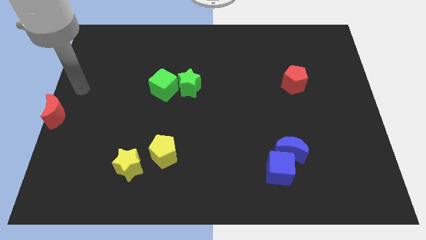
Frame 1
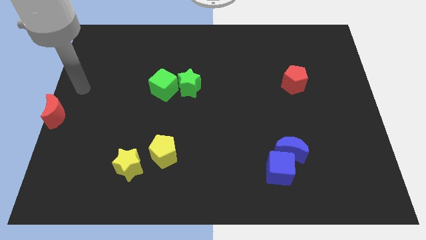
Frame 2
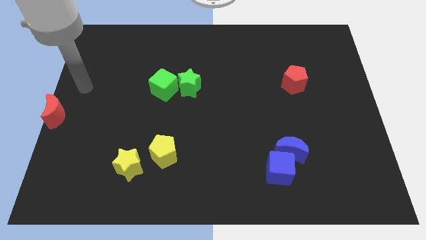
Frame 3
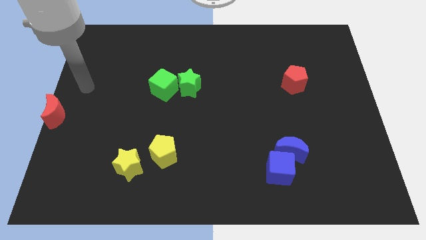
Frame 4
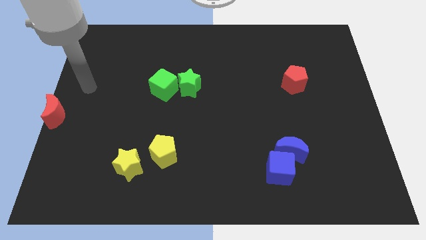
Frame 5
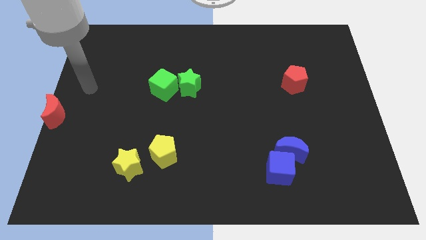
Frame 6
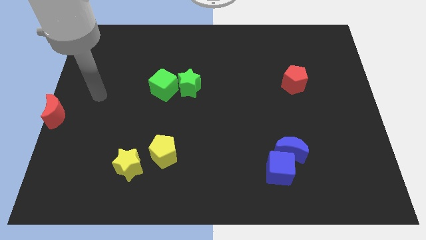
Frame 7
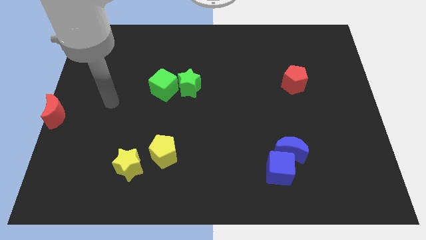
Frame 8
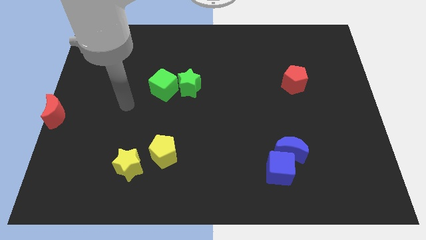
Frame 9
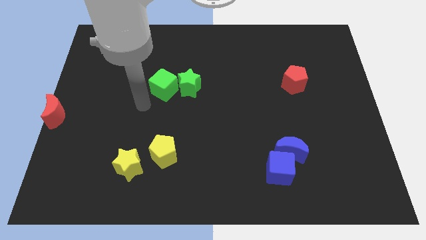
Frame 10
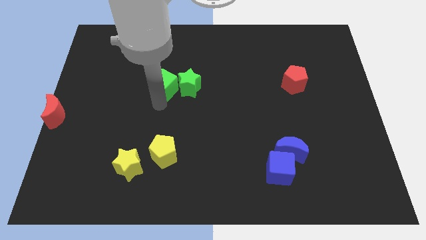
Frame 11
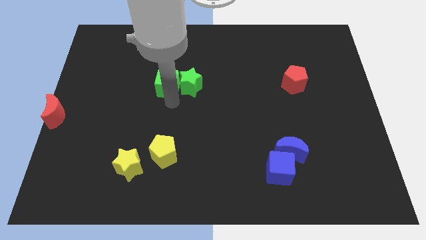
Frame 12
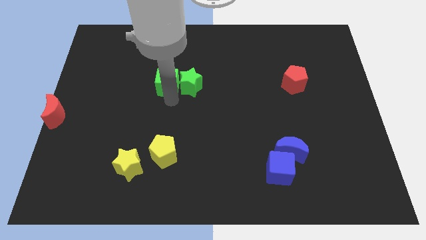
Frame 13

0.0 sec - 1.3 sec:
place your hand below the green cube

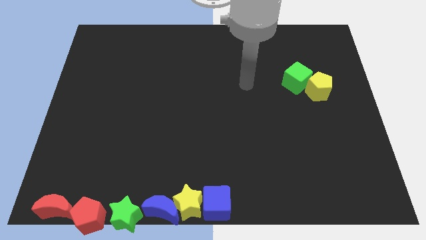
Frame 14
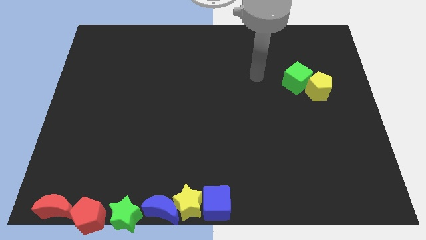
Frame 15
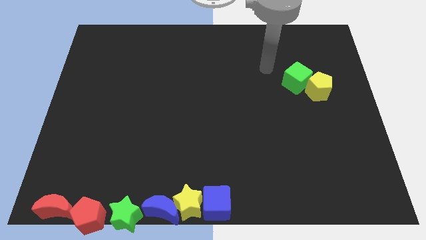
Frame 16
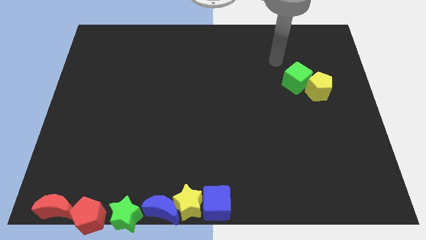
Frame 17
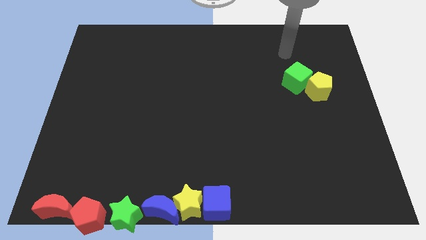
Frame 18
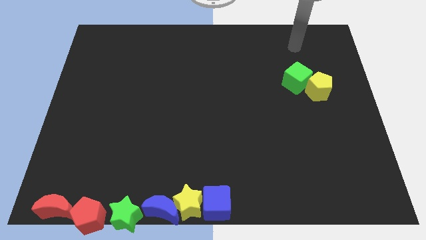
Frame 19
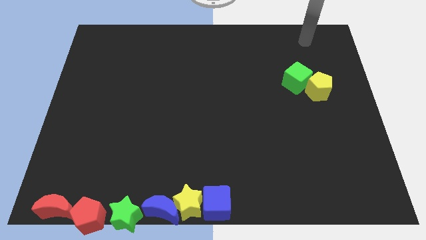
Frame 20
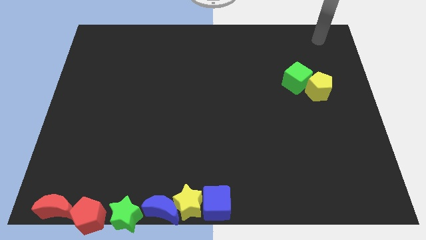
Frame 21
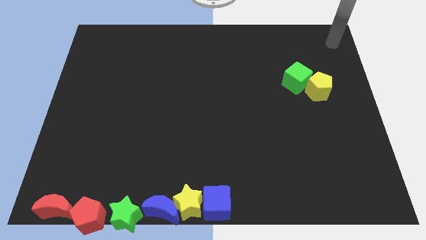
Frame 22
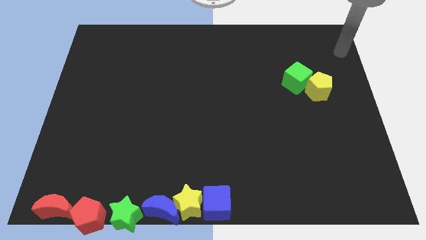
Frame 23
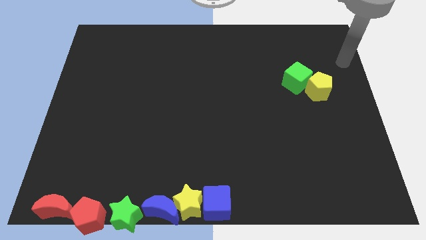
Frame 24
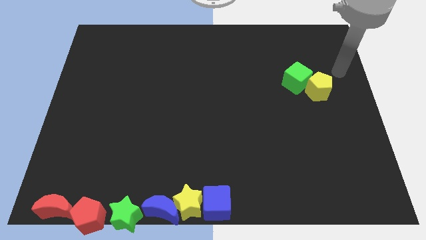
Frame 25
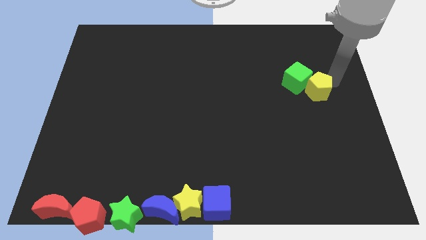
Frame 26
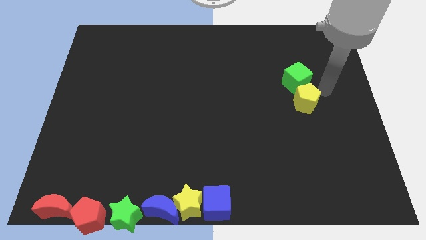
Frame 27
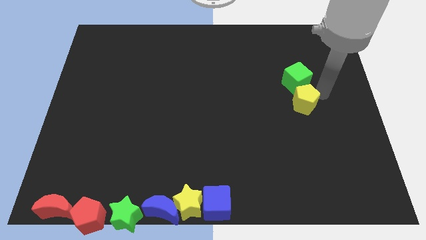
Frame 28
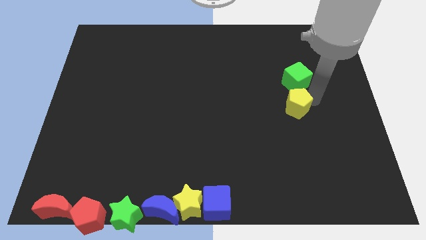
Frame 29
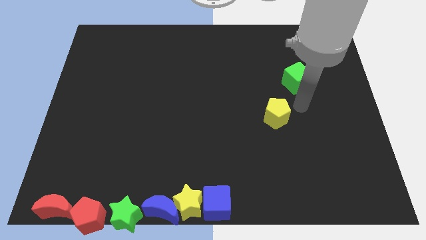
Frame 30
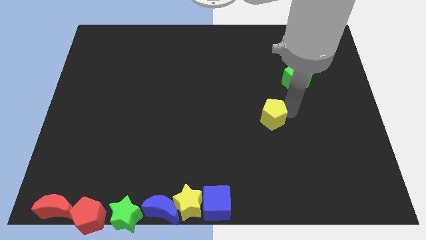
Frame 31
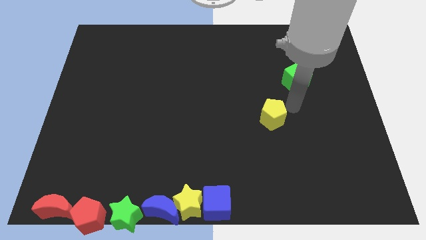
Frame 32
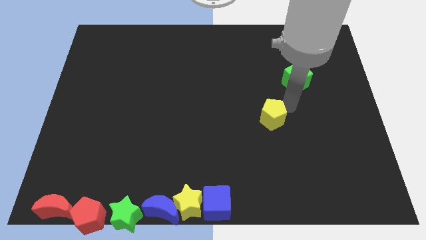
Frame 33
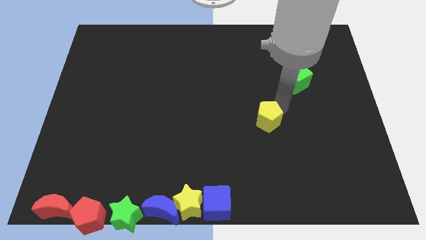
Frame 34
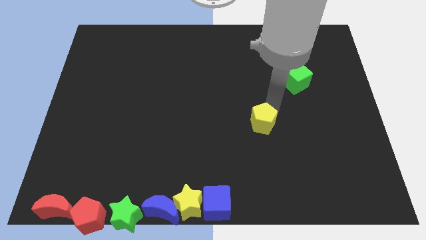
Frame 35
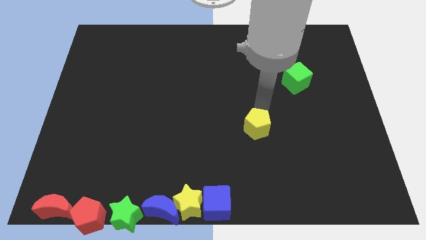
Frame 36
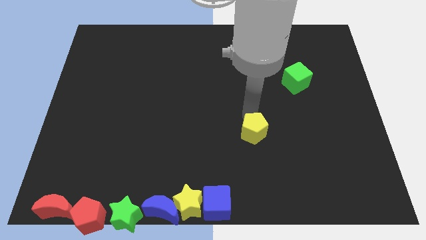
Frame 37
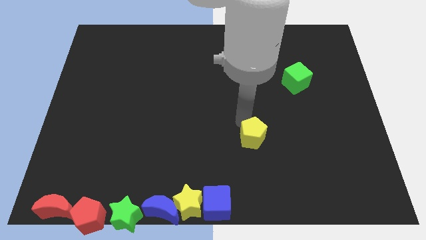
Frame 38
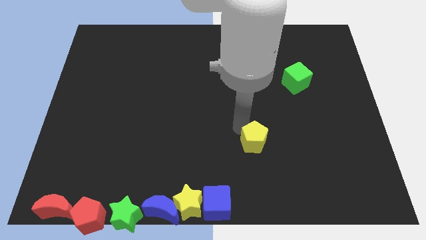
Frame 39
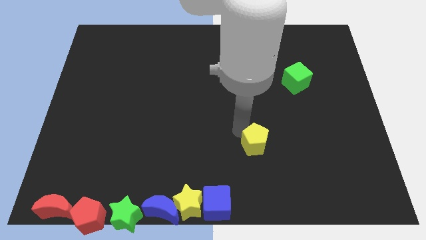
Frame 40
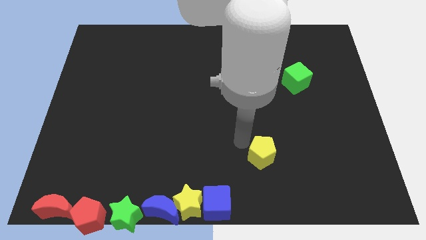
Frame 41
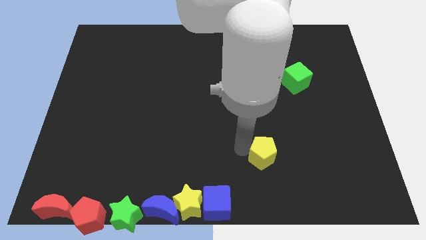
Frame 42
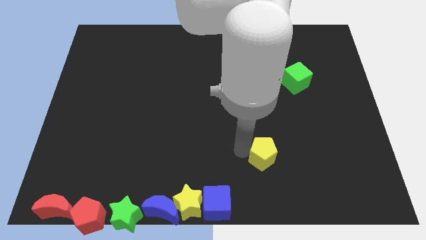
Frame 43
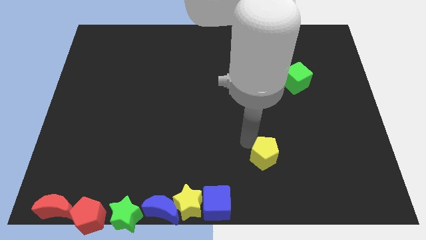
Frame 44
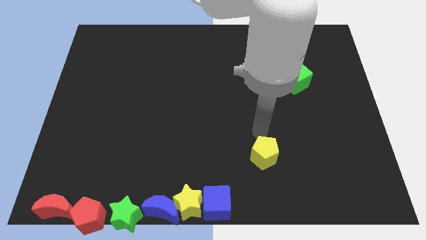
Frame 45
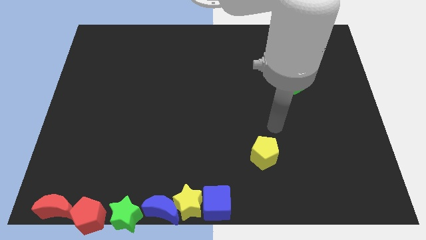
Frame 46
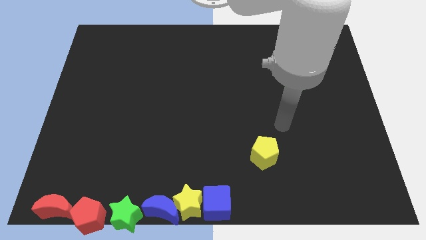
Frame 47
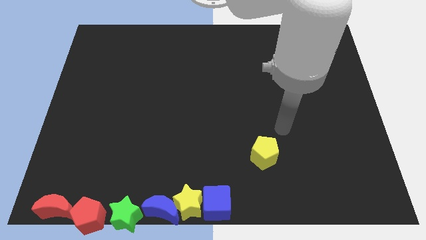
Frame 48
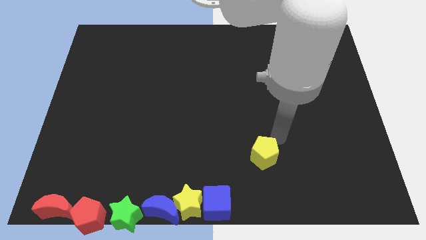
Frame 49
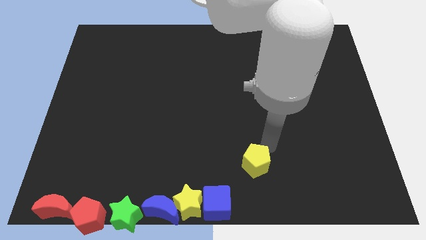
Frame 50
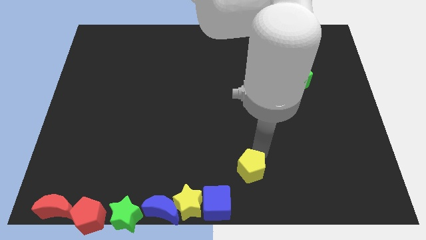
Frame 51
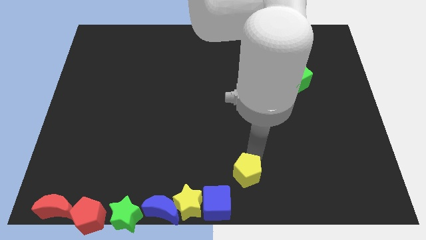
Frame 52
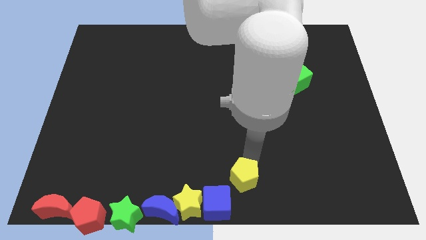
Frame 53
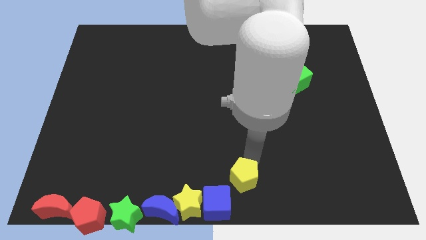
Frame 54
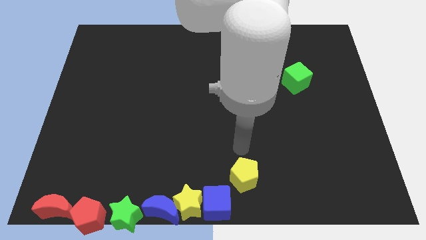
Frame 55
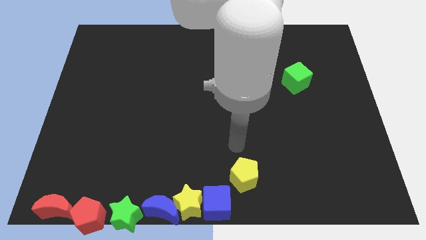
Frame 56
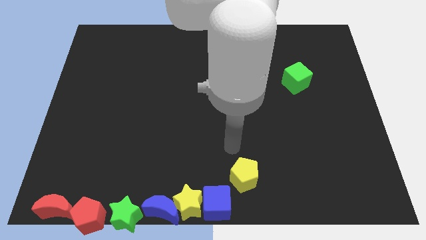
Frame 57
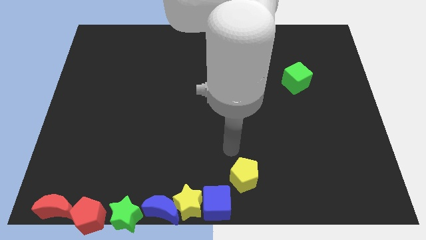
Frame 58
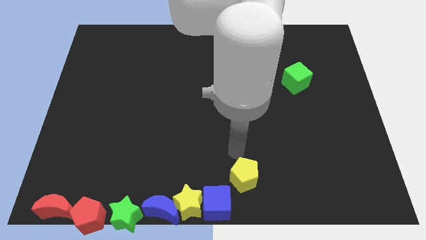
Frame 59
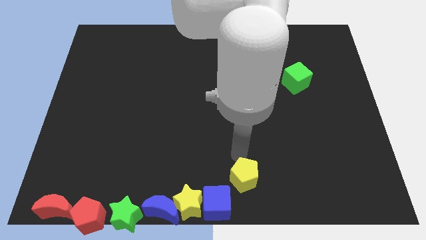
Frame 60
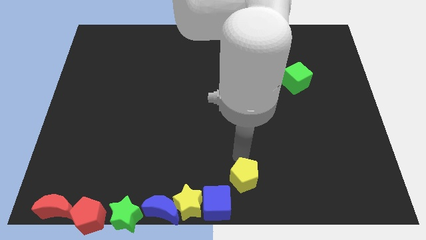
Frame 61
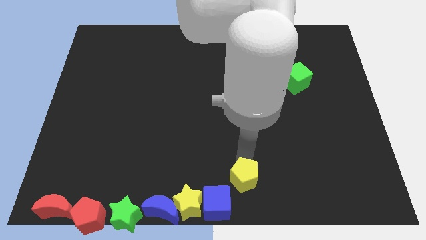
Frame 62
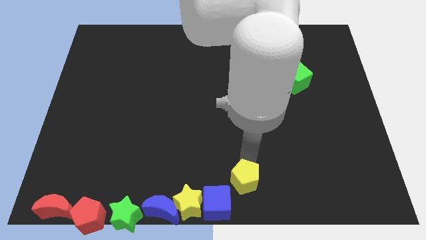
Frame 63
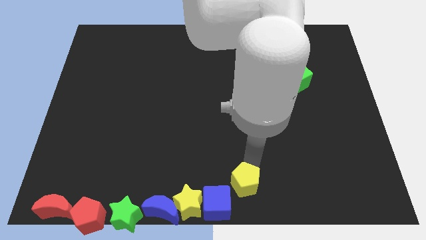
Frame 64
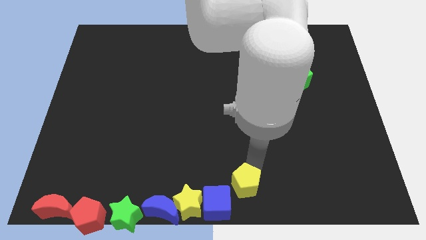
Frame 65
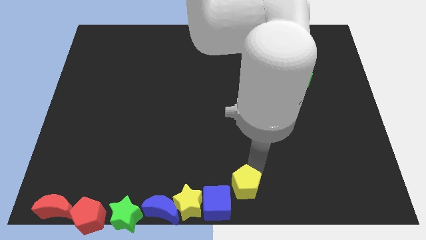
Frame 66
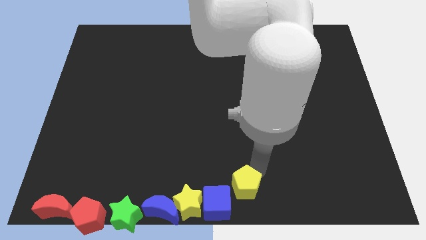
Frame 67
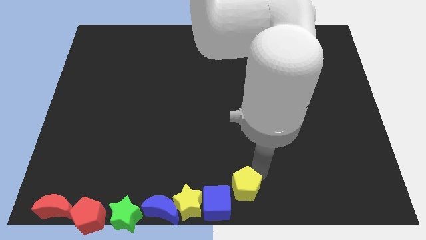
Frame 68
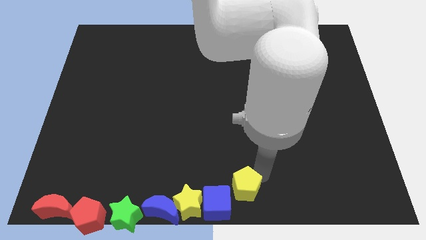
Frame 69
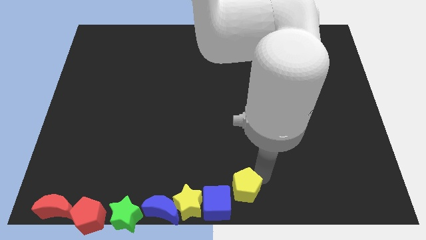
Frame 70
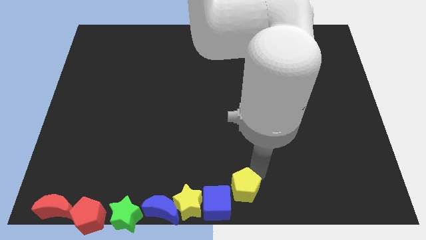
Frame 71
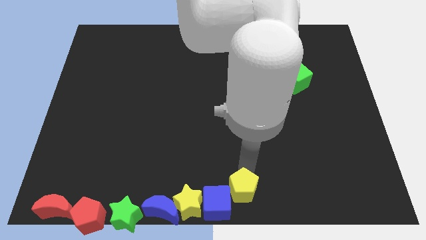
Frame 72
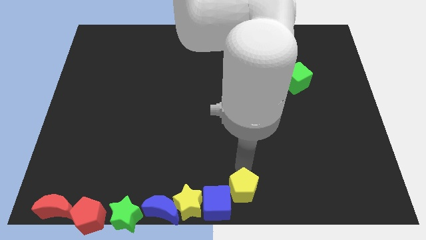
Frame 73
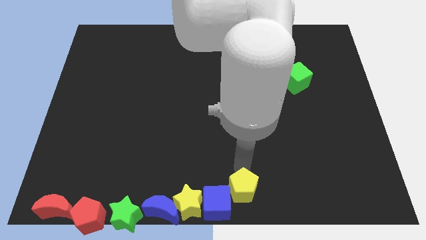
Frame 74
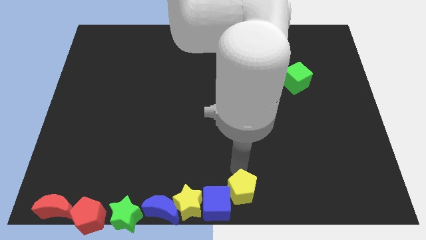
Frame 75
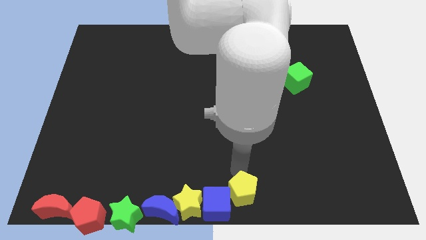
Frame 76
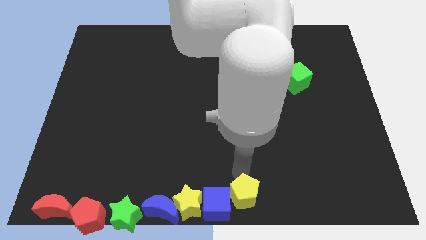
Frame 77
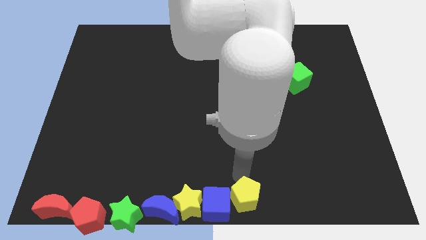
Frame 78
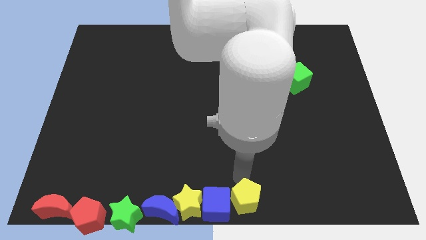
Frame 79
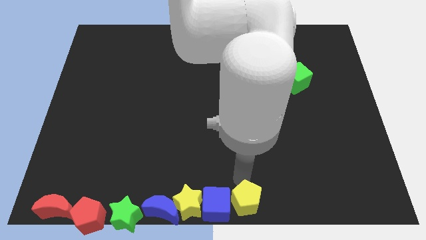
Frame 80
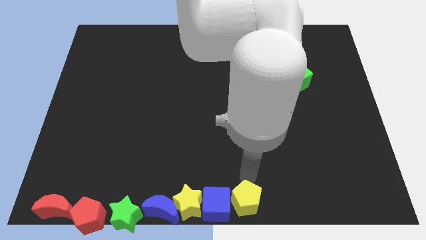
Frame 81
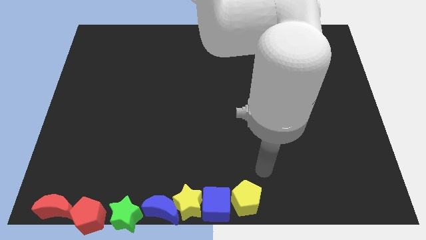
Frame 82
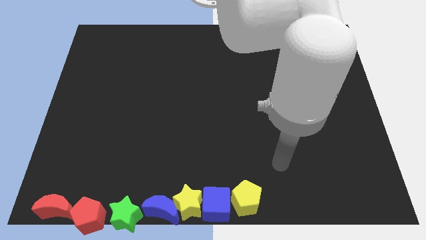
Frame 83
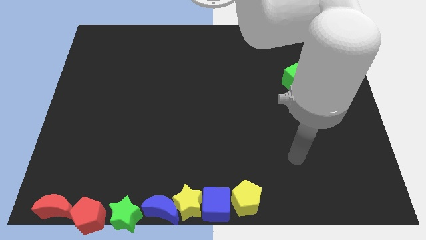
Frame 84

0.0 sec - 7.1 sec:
push the yellow pentagon to the right side of the blue cube

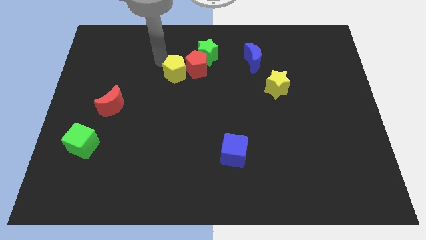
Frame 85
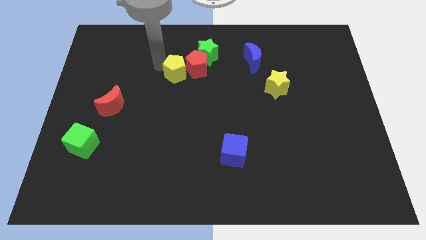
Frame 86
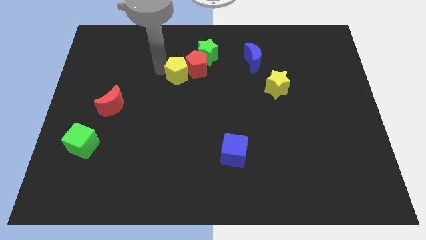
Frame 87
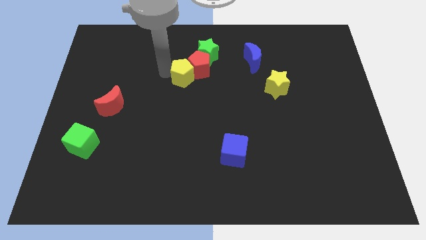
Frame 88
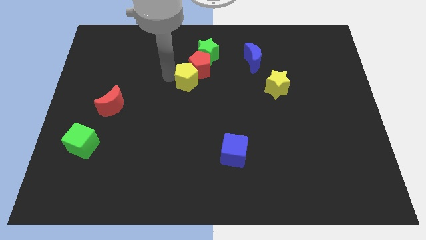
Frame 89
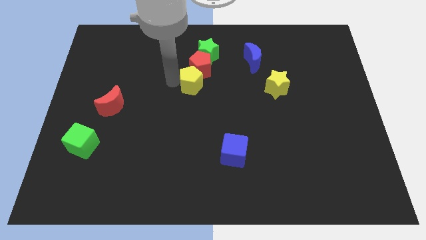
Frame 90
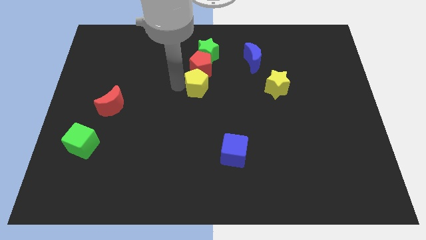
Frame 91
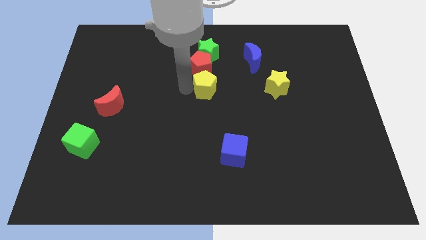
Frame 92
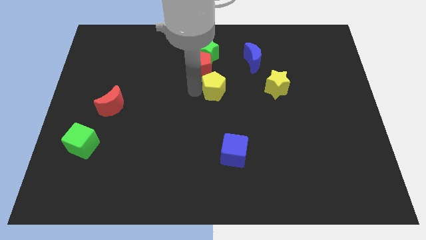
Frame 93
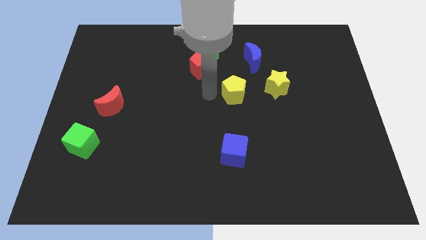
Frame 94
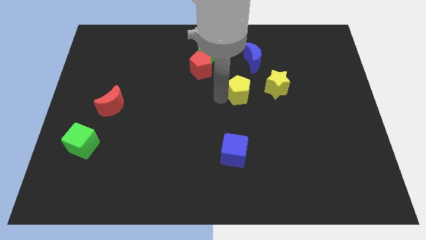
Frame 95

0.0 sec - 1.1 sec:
move the yellow pentagon towards the yellow star
